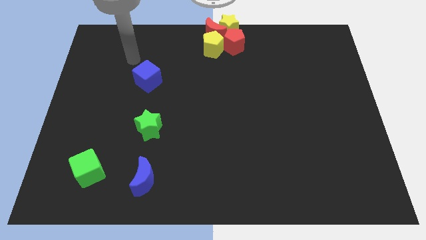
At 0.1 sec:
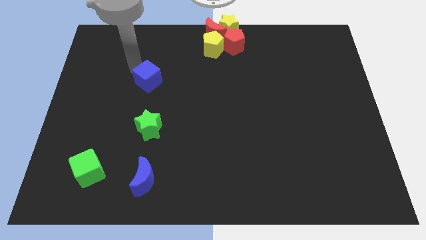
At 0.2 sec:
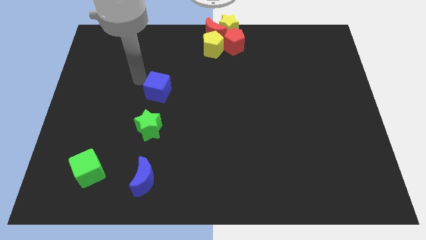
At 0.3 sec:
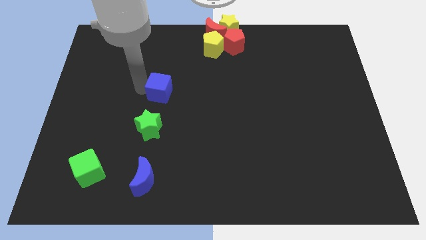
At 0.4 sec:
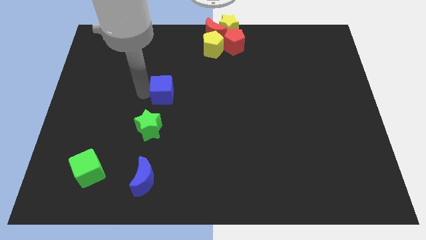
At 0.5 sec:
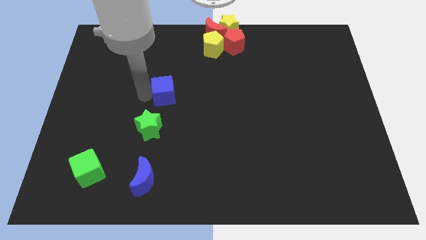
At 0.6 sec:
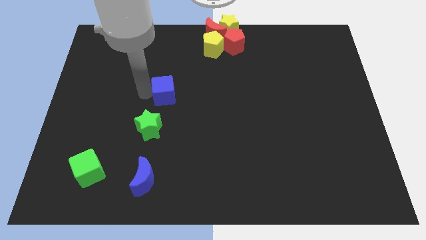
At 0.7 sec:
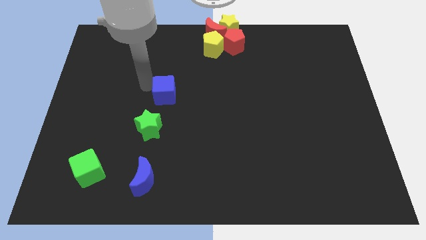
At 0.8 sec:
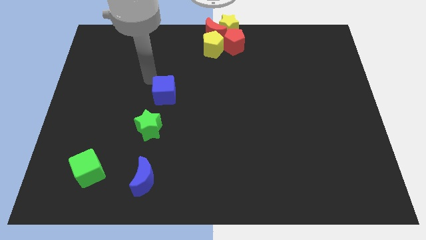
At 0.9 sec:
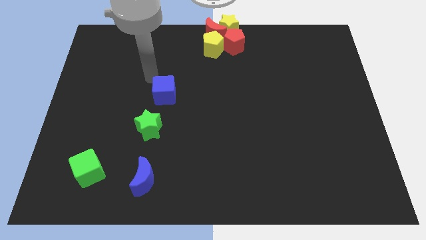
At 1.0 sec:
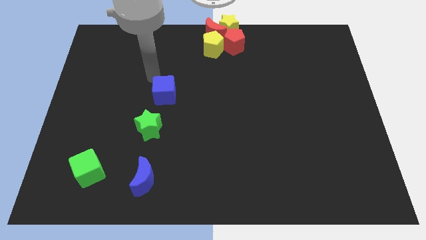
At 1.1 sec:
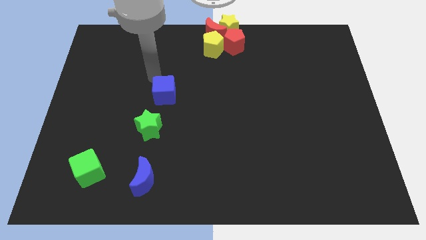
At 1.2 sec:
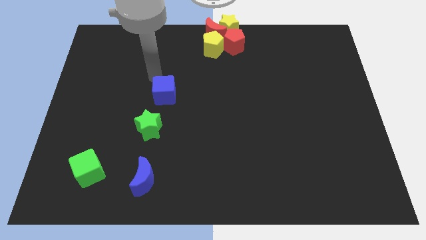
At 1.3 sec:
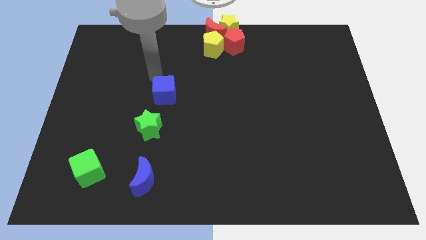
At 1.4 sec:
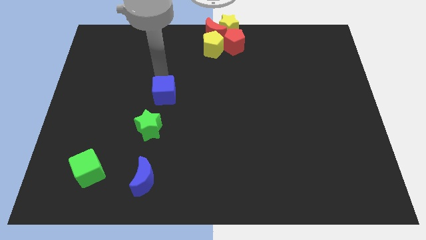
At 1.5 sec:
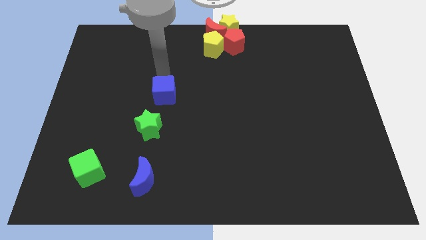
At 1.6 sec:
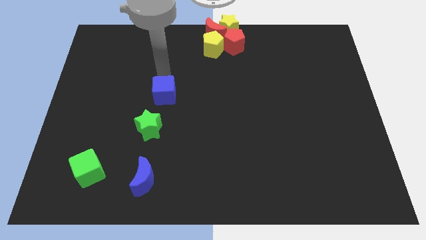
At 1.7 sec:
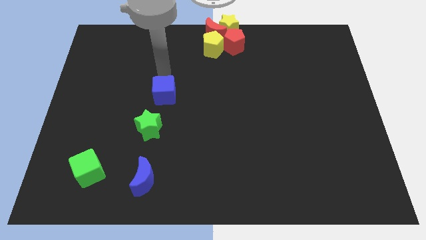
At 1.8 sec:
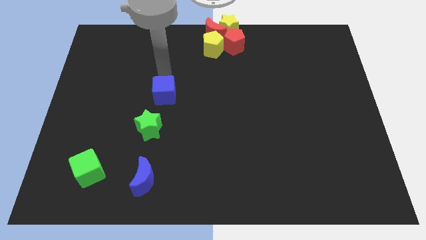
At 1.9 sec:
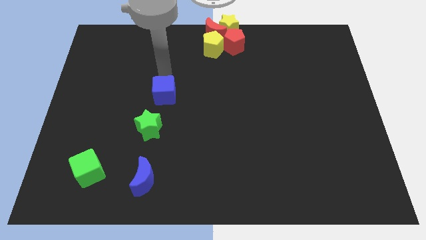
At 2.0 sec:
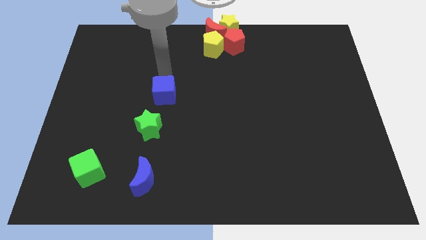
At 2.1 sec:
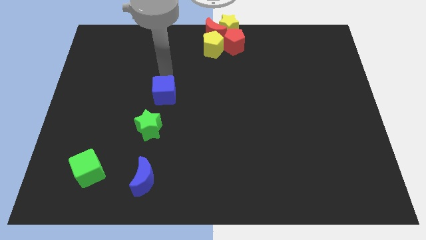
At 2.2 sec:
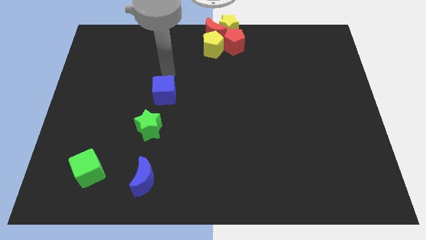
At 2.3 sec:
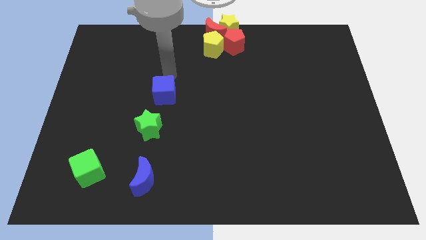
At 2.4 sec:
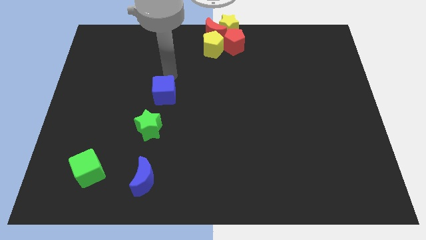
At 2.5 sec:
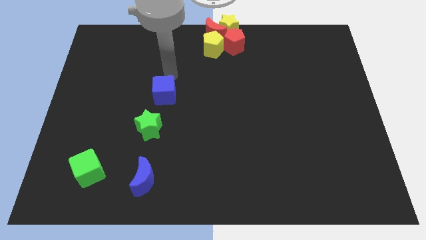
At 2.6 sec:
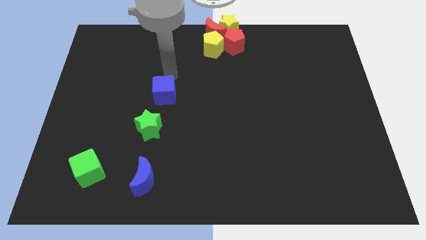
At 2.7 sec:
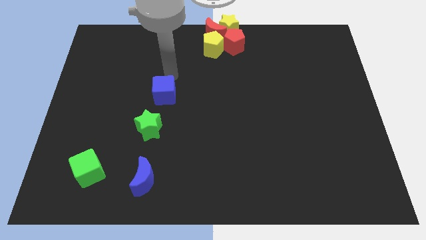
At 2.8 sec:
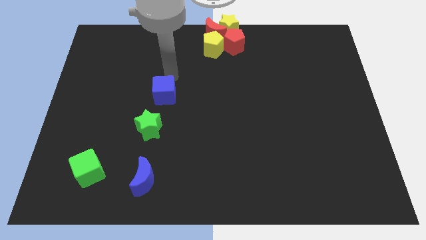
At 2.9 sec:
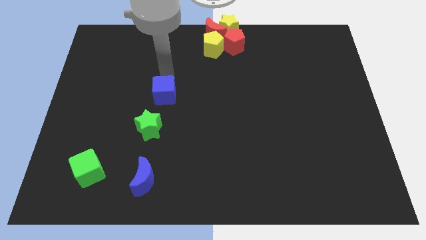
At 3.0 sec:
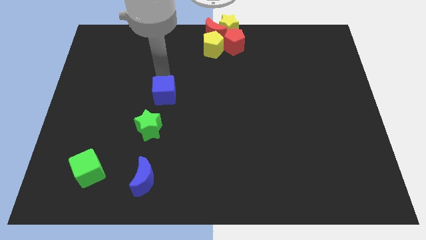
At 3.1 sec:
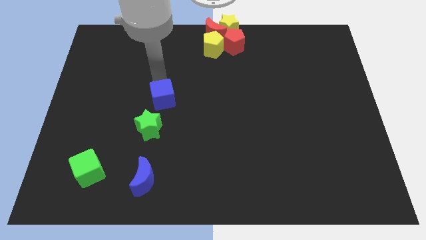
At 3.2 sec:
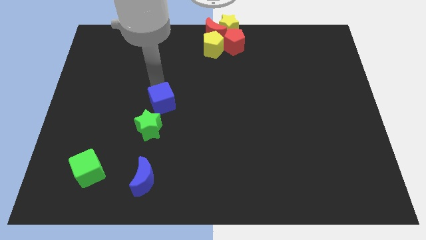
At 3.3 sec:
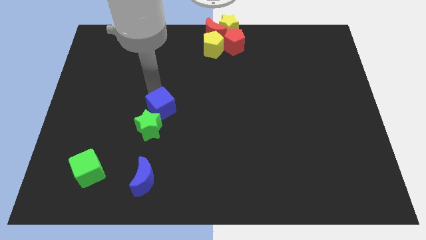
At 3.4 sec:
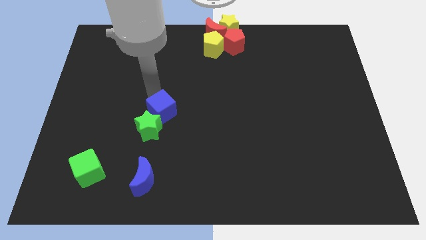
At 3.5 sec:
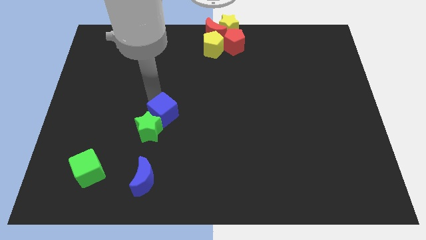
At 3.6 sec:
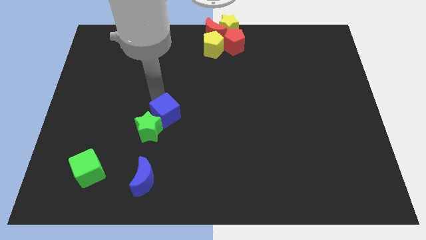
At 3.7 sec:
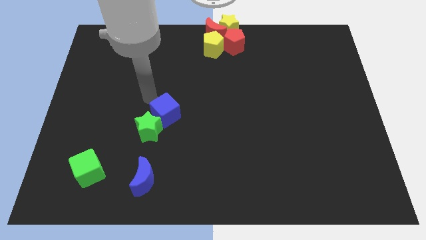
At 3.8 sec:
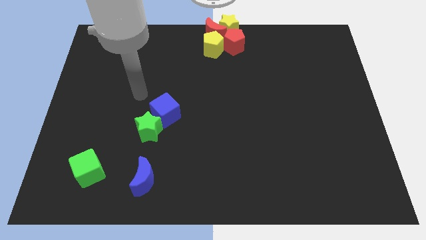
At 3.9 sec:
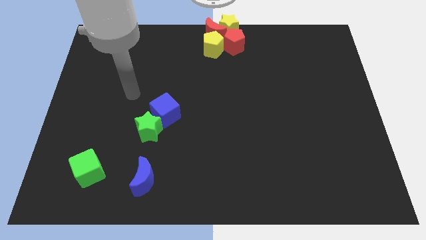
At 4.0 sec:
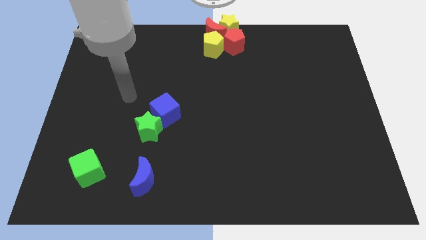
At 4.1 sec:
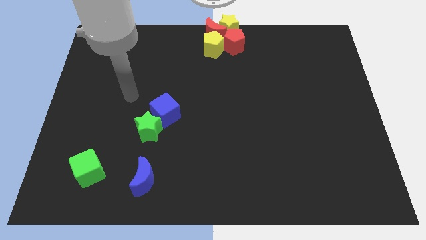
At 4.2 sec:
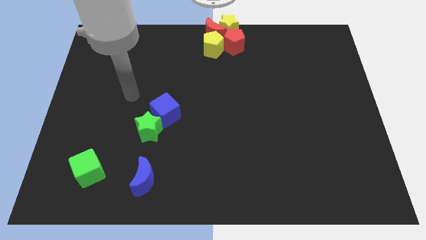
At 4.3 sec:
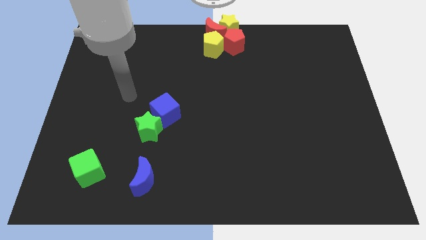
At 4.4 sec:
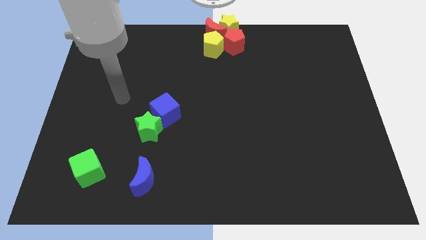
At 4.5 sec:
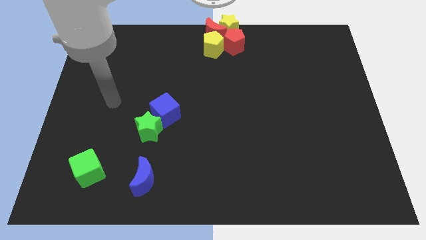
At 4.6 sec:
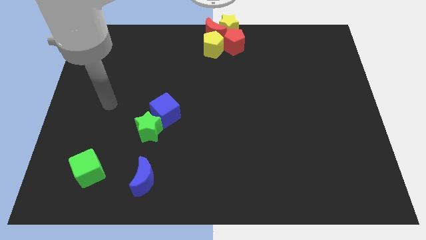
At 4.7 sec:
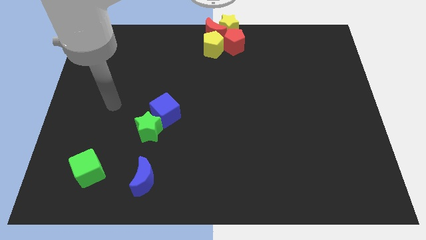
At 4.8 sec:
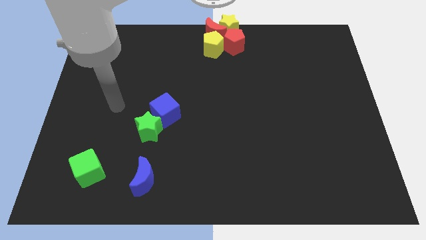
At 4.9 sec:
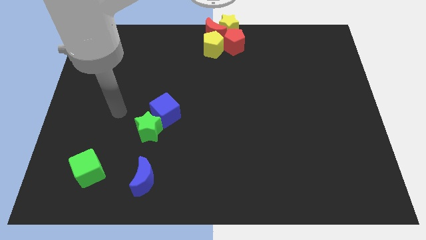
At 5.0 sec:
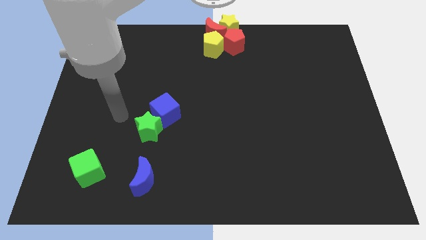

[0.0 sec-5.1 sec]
slide the blue cube diagonally top right to the green star

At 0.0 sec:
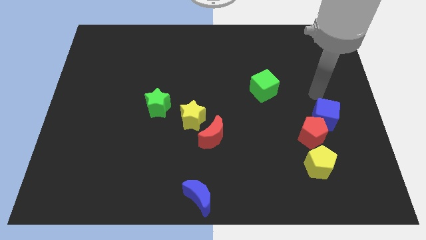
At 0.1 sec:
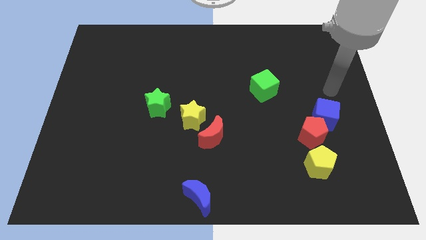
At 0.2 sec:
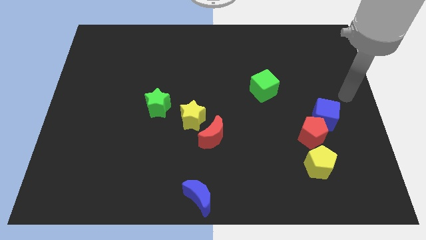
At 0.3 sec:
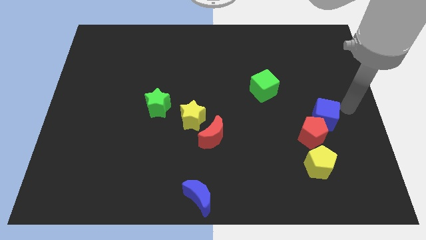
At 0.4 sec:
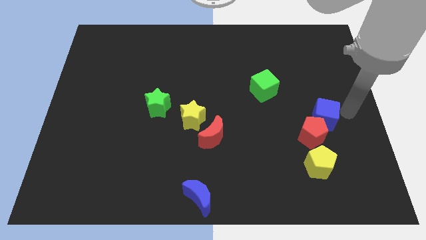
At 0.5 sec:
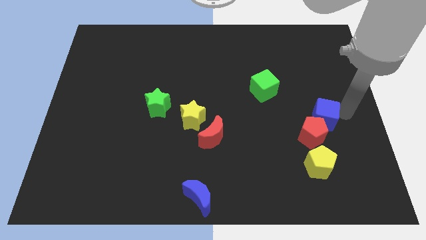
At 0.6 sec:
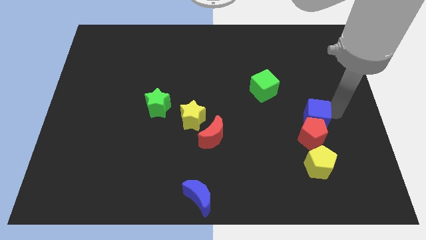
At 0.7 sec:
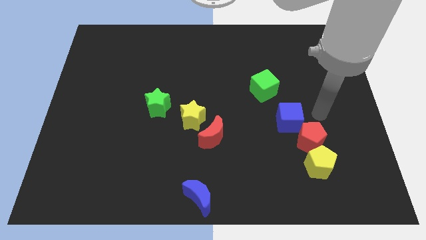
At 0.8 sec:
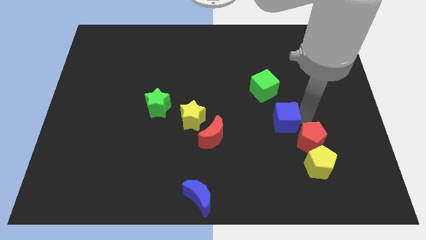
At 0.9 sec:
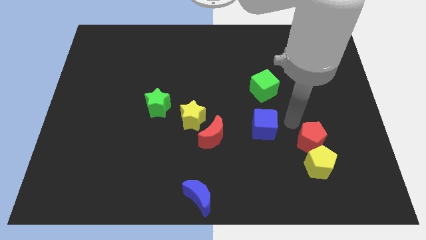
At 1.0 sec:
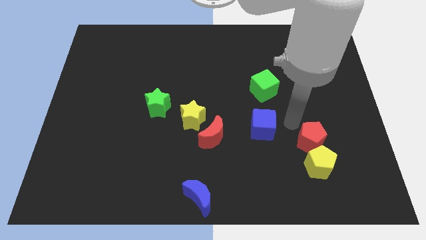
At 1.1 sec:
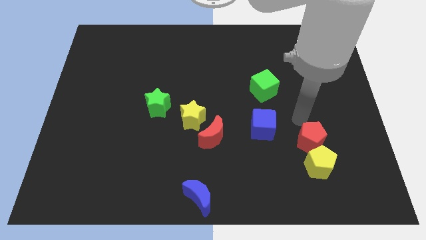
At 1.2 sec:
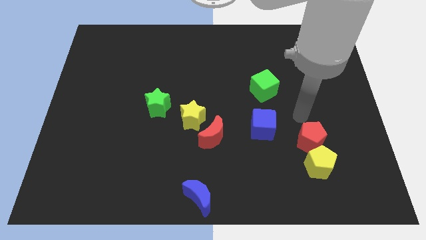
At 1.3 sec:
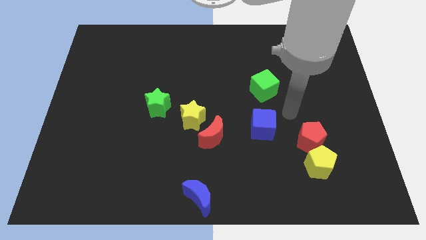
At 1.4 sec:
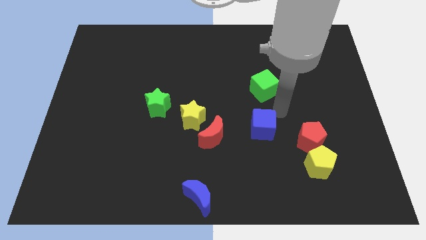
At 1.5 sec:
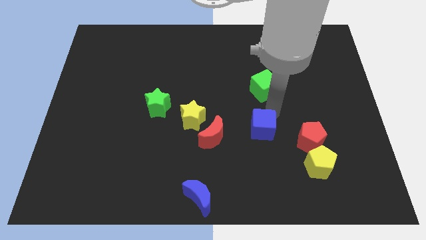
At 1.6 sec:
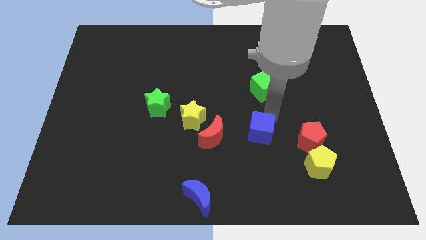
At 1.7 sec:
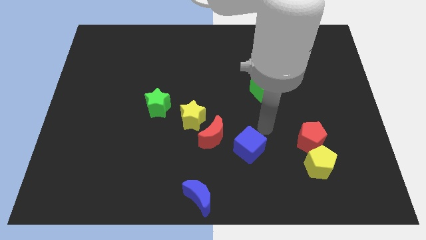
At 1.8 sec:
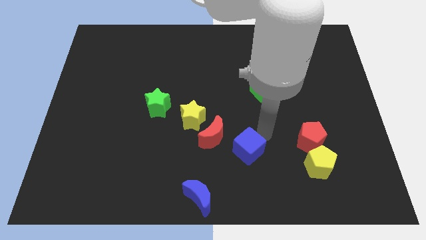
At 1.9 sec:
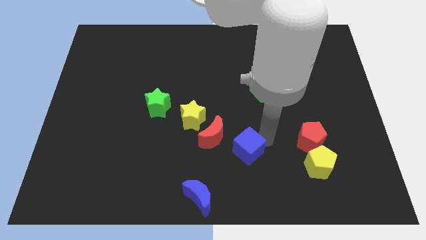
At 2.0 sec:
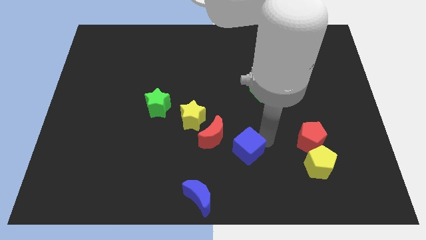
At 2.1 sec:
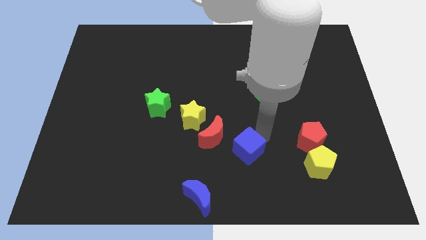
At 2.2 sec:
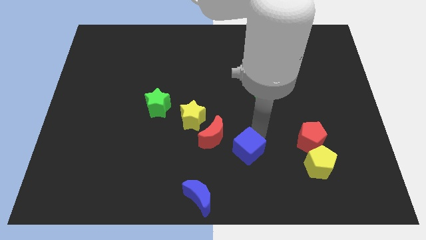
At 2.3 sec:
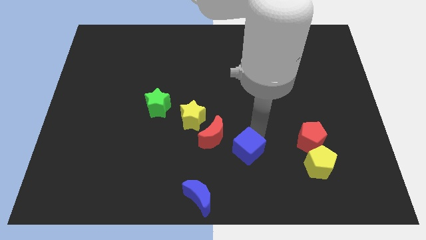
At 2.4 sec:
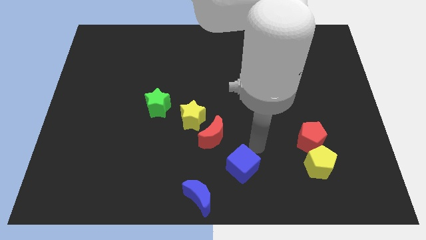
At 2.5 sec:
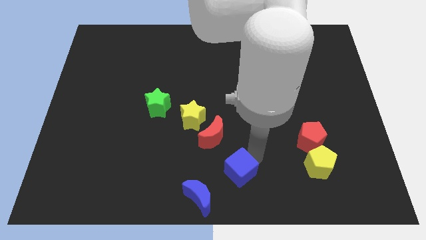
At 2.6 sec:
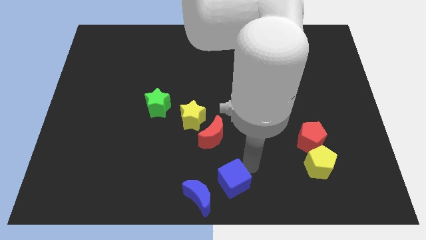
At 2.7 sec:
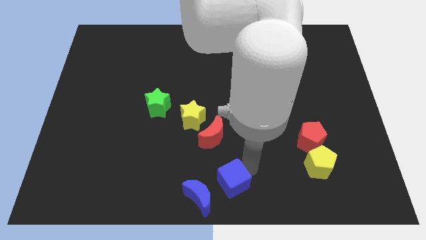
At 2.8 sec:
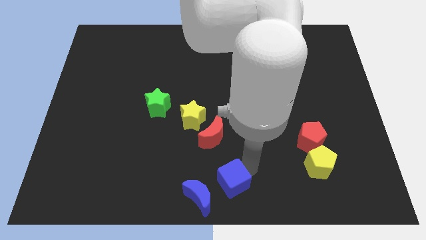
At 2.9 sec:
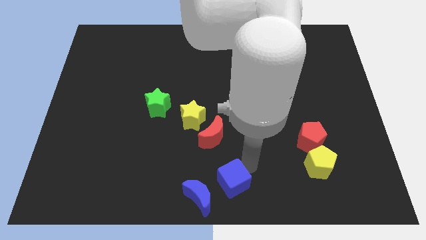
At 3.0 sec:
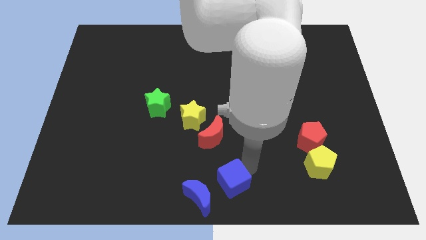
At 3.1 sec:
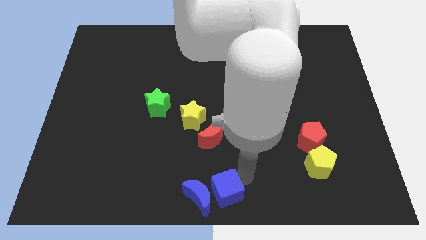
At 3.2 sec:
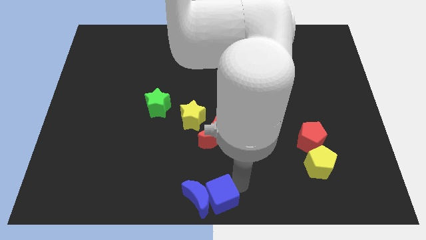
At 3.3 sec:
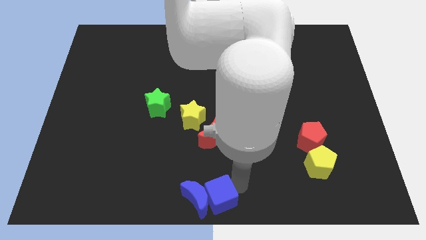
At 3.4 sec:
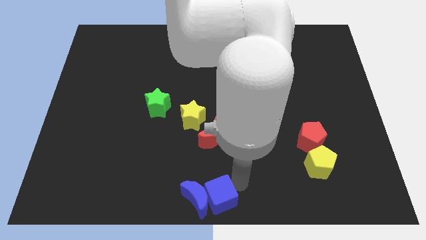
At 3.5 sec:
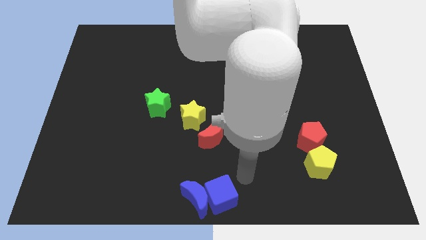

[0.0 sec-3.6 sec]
push the blue cube into the right of the blue crescent

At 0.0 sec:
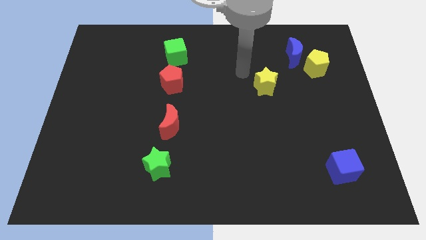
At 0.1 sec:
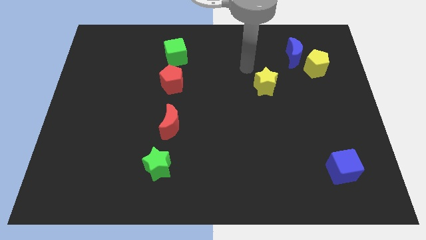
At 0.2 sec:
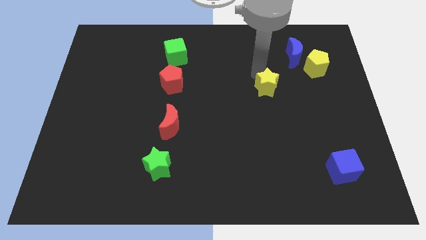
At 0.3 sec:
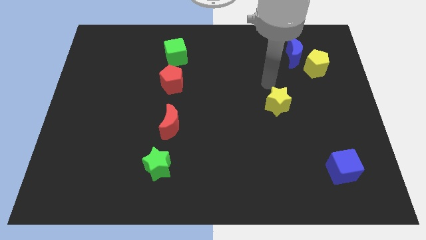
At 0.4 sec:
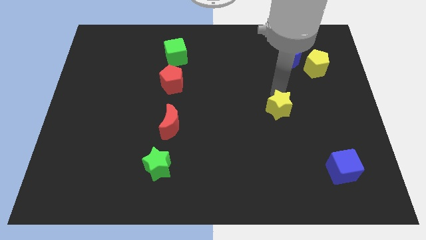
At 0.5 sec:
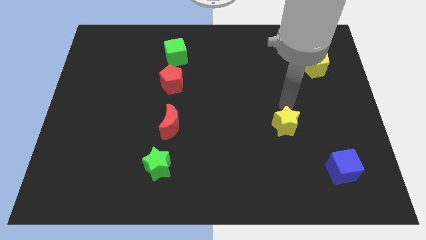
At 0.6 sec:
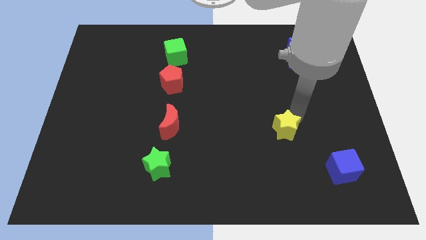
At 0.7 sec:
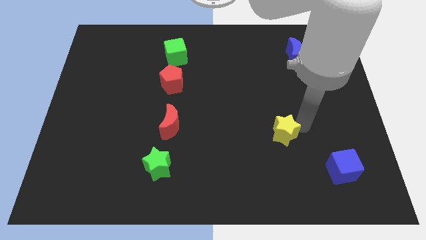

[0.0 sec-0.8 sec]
move the yellow star to the bottom of the board
